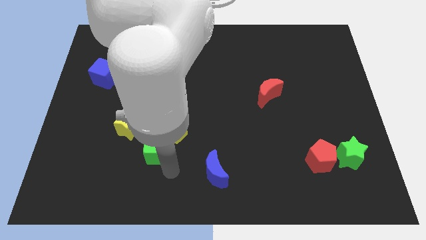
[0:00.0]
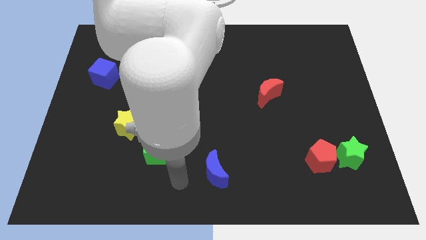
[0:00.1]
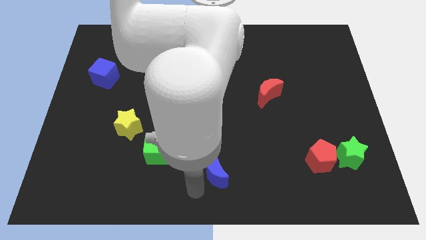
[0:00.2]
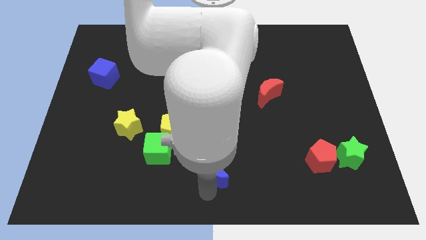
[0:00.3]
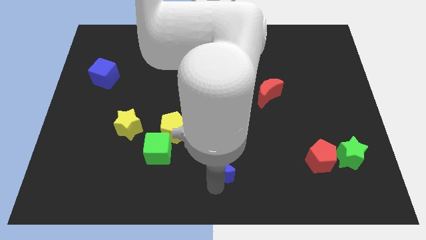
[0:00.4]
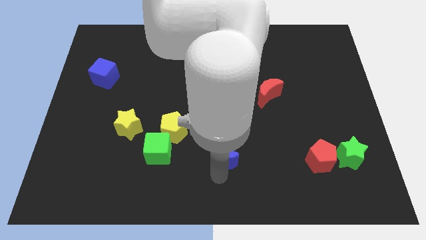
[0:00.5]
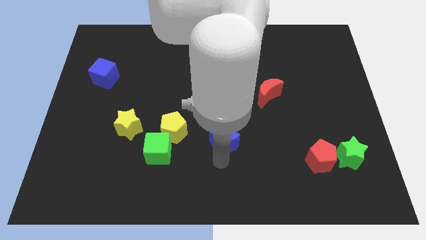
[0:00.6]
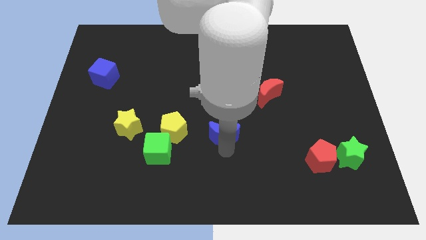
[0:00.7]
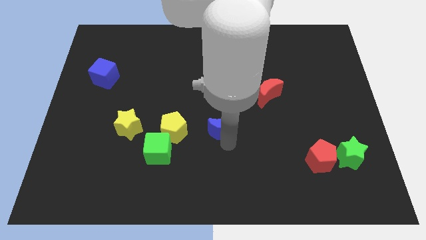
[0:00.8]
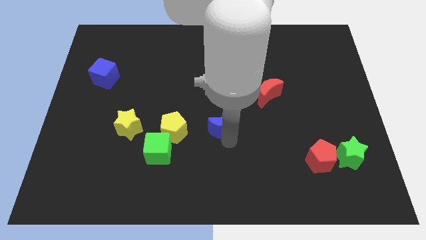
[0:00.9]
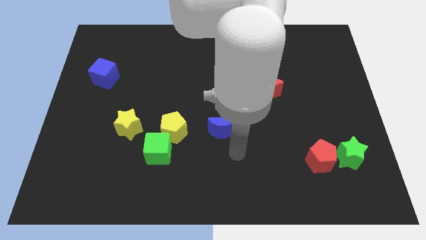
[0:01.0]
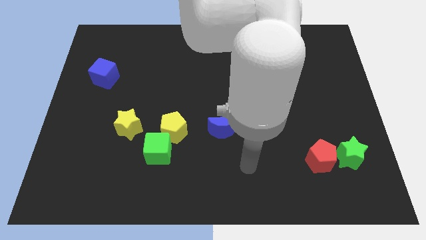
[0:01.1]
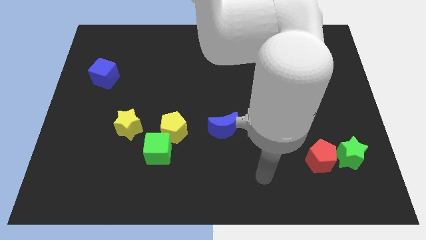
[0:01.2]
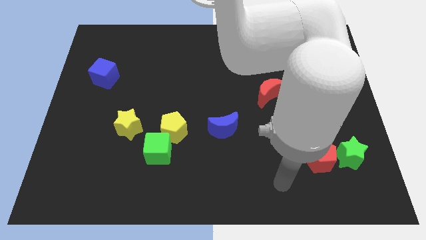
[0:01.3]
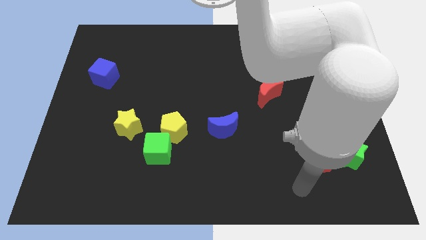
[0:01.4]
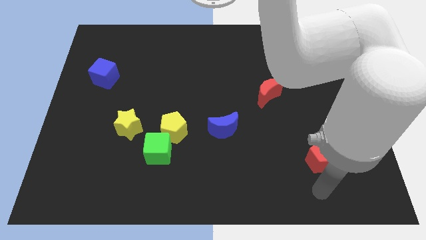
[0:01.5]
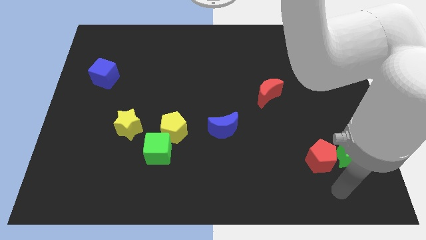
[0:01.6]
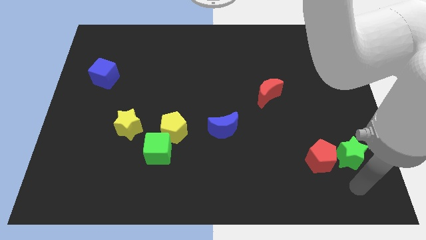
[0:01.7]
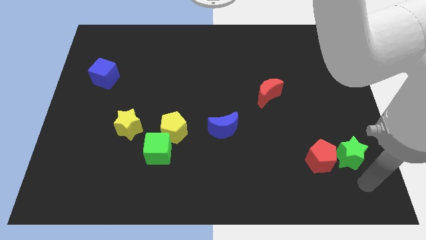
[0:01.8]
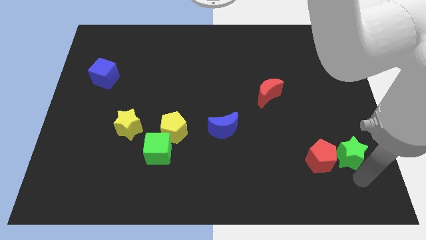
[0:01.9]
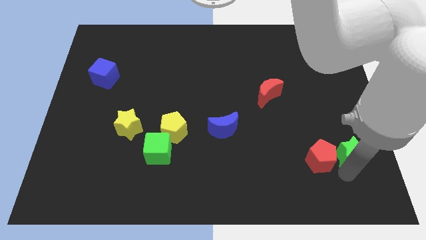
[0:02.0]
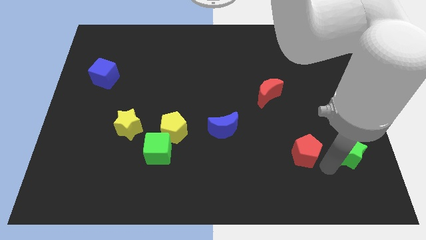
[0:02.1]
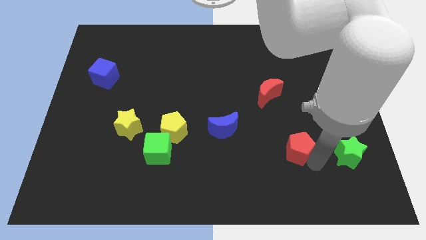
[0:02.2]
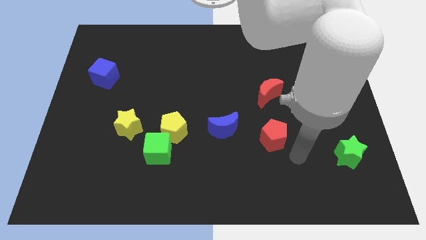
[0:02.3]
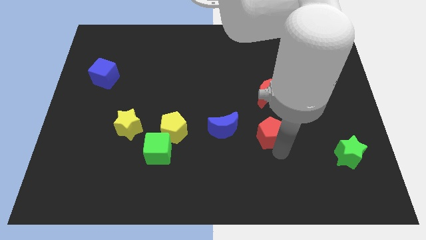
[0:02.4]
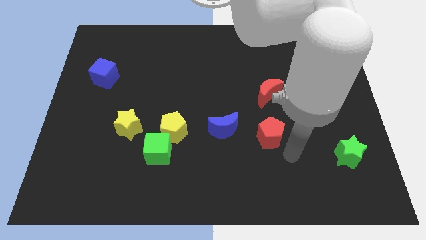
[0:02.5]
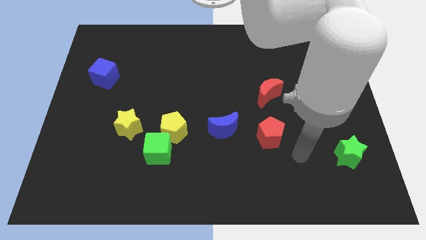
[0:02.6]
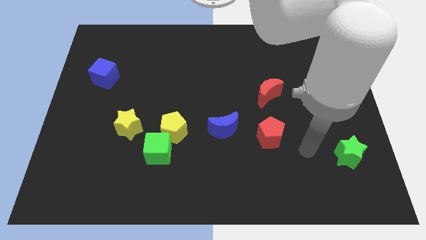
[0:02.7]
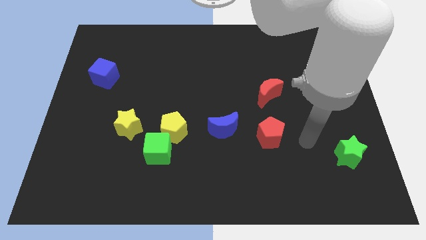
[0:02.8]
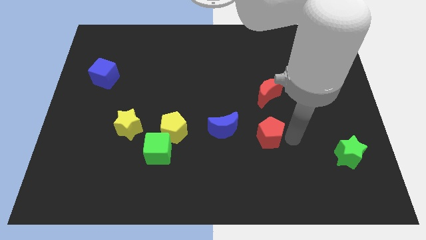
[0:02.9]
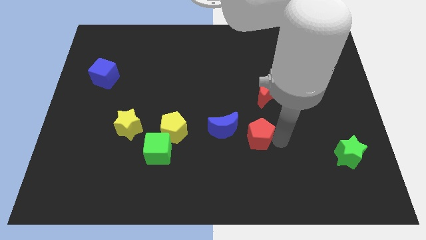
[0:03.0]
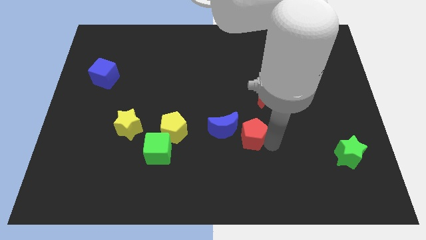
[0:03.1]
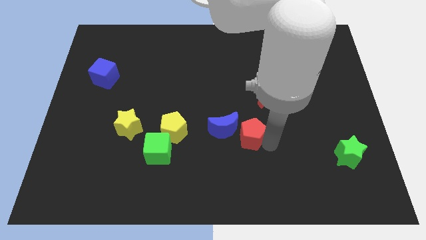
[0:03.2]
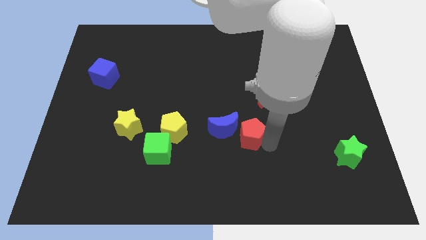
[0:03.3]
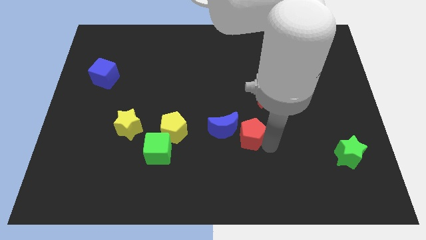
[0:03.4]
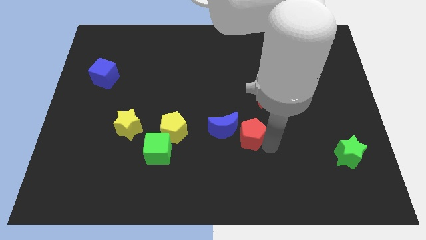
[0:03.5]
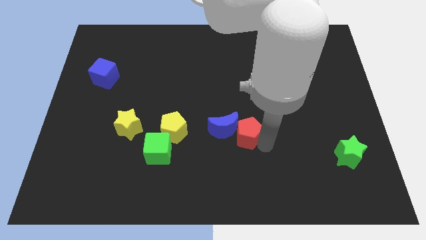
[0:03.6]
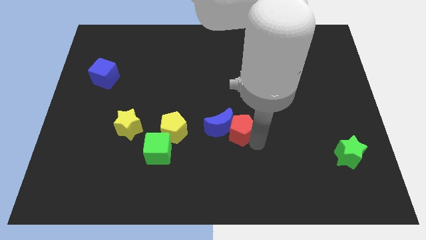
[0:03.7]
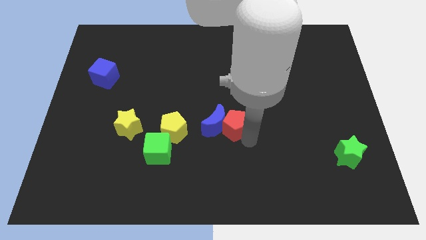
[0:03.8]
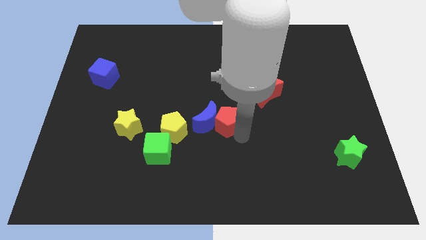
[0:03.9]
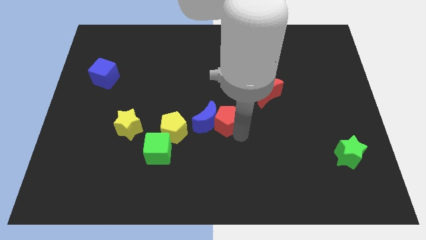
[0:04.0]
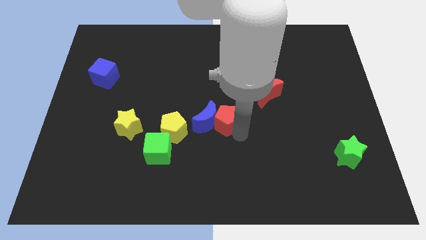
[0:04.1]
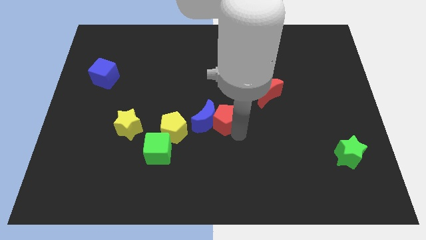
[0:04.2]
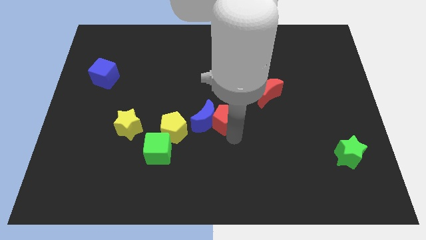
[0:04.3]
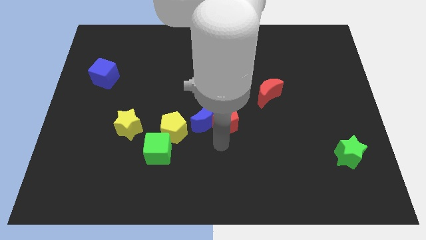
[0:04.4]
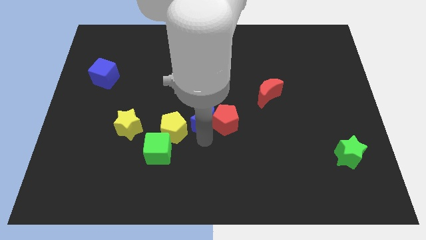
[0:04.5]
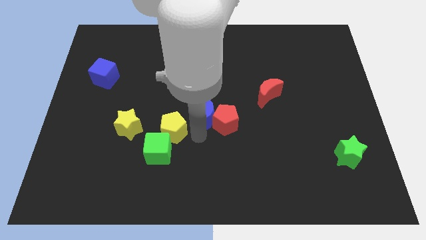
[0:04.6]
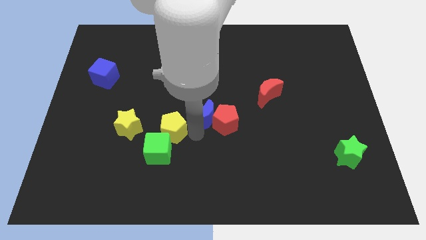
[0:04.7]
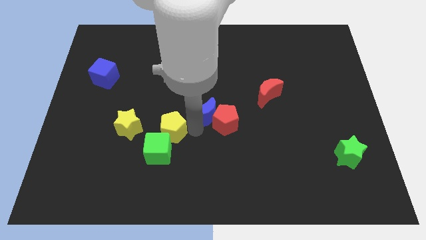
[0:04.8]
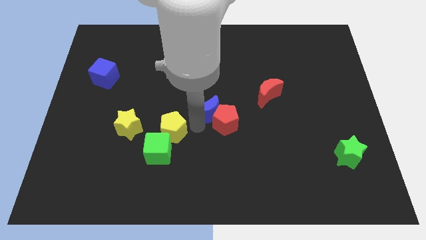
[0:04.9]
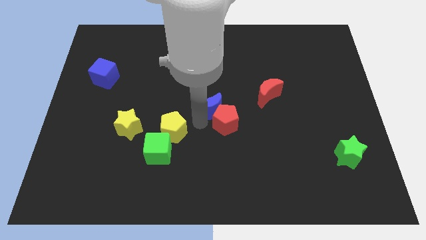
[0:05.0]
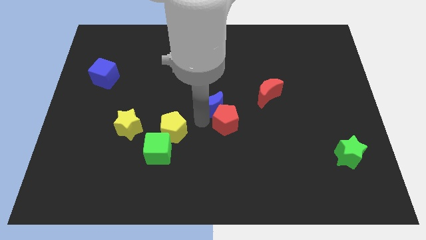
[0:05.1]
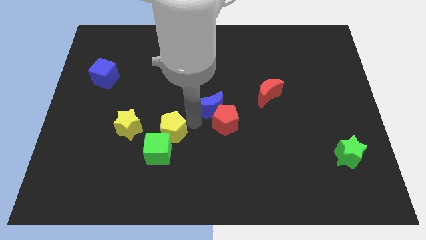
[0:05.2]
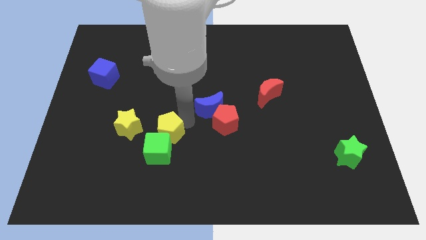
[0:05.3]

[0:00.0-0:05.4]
push the blue moon bottom center to center with red pentagon

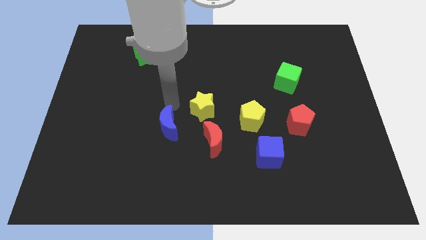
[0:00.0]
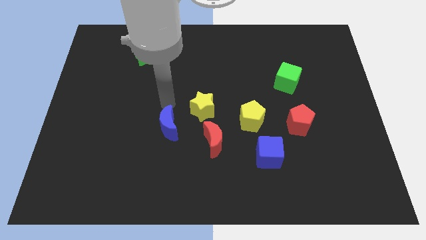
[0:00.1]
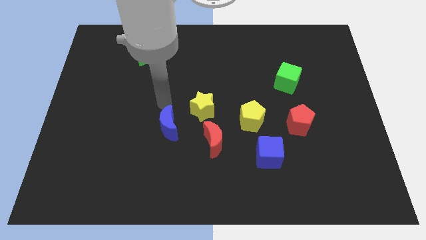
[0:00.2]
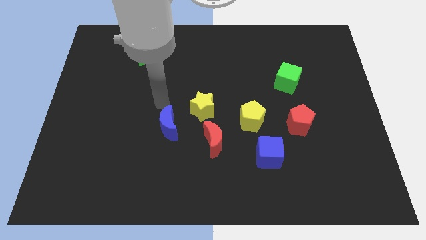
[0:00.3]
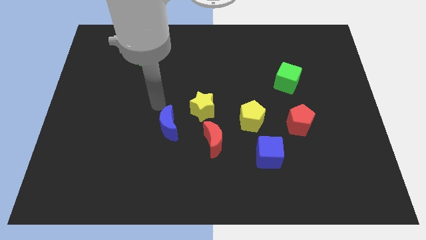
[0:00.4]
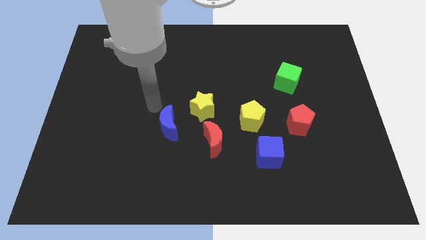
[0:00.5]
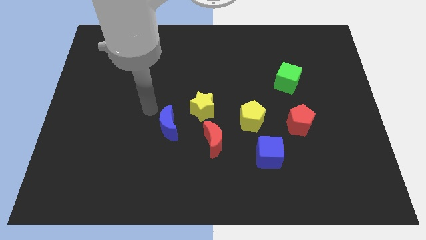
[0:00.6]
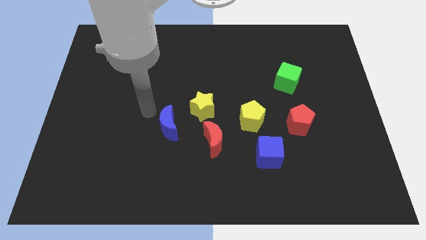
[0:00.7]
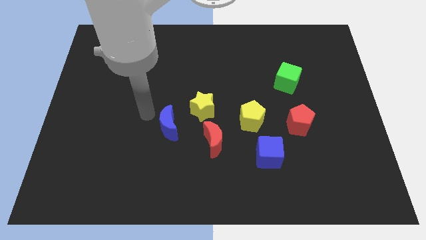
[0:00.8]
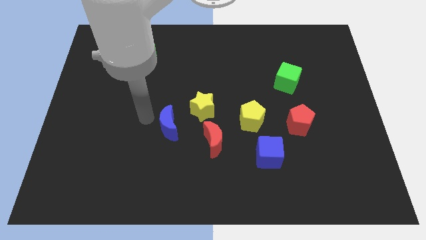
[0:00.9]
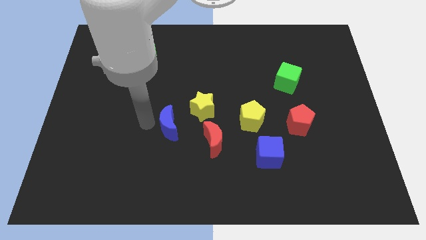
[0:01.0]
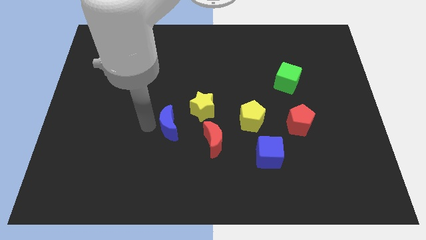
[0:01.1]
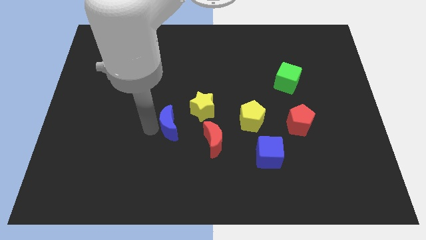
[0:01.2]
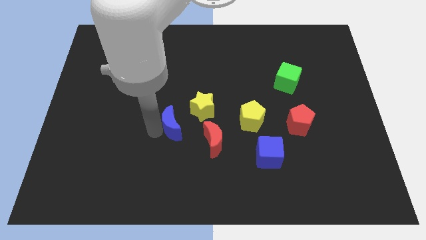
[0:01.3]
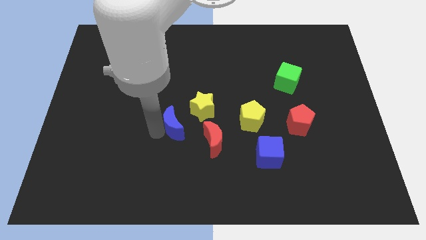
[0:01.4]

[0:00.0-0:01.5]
place your arm left to blue moon

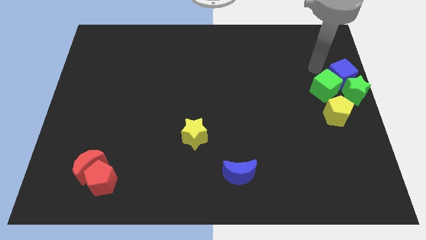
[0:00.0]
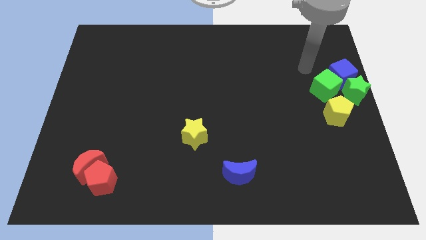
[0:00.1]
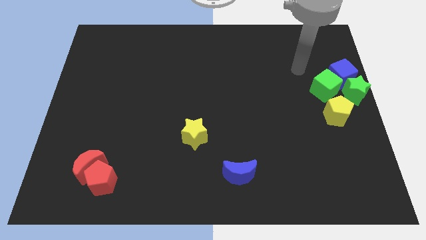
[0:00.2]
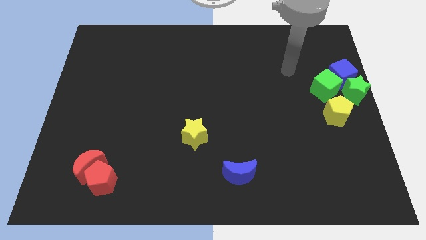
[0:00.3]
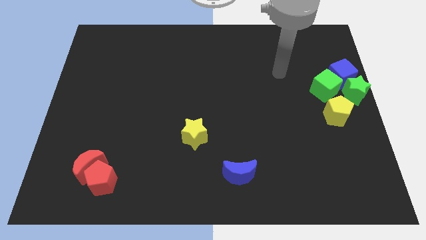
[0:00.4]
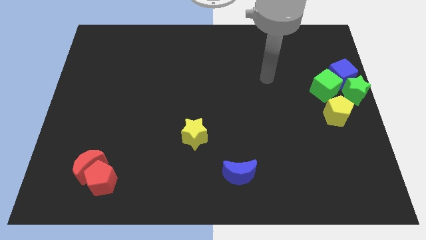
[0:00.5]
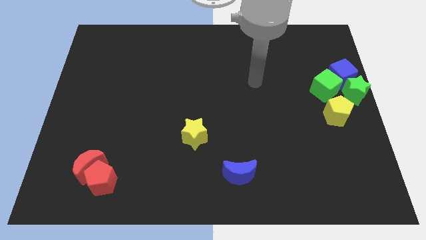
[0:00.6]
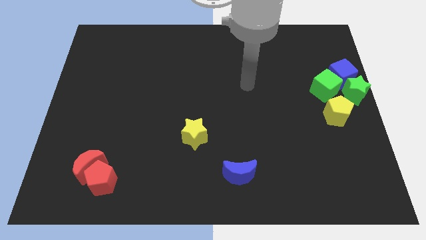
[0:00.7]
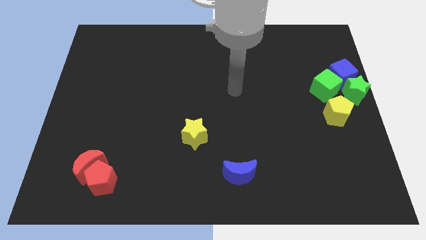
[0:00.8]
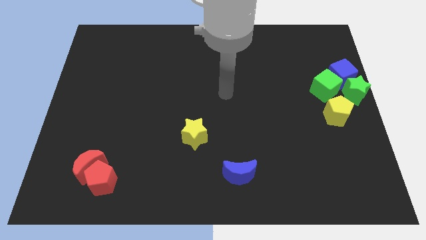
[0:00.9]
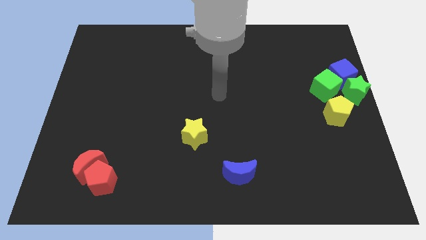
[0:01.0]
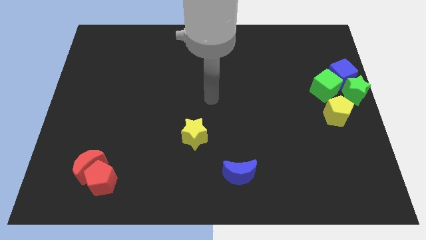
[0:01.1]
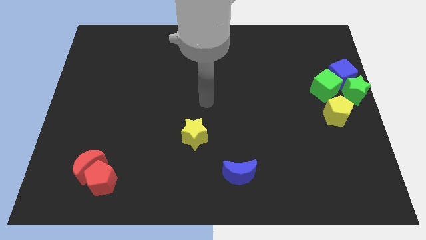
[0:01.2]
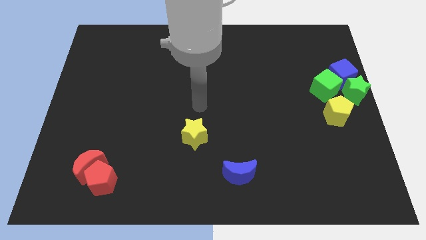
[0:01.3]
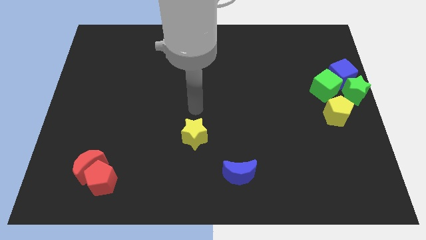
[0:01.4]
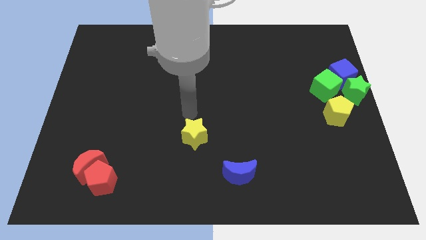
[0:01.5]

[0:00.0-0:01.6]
point your arm at the to of yellow star

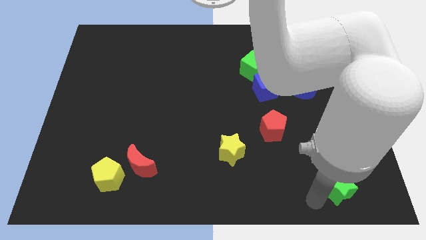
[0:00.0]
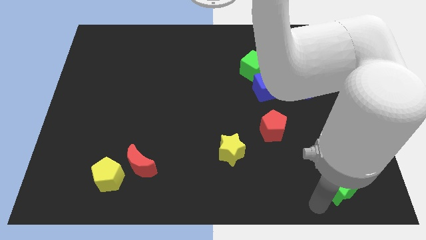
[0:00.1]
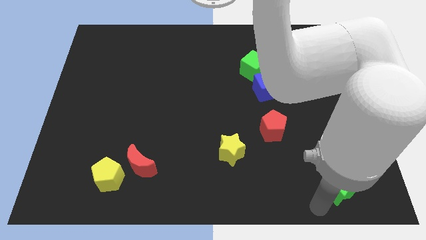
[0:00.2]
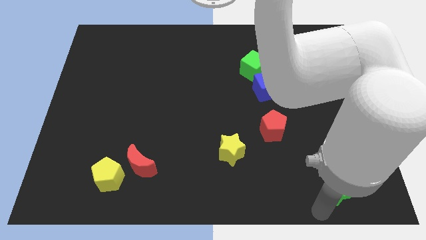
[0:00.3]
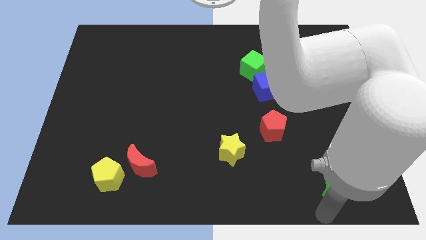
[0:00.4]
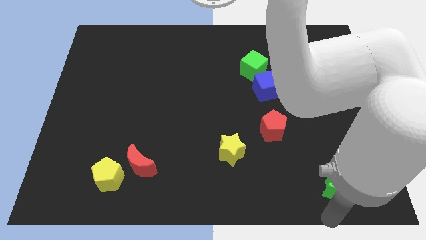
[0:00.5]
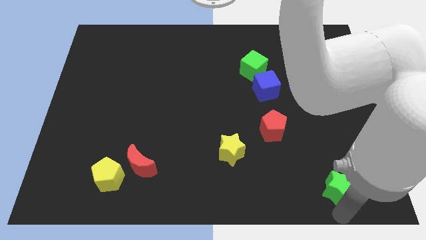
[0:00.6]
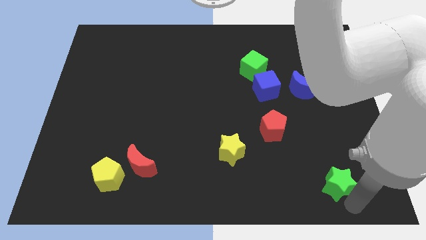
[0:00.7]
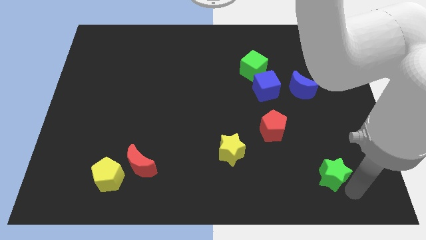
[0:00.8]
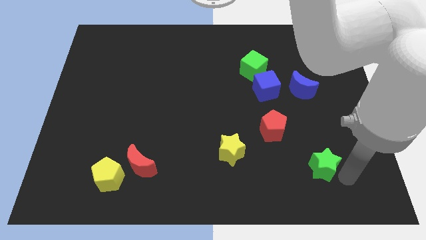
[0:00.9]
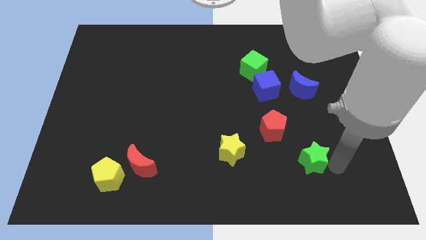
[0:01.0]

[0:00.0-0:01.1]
push green star towards red pentagon
